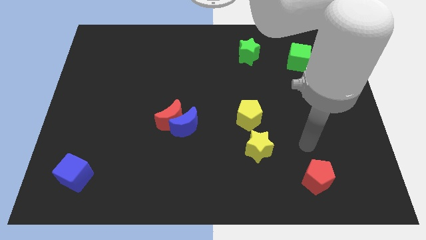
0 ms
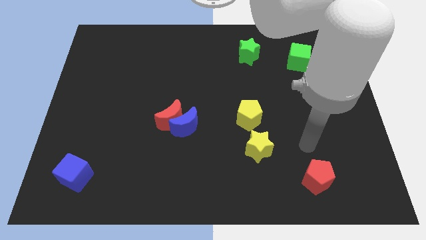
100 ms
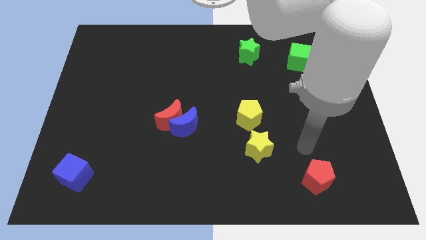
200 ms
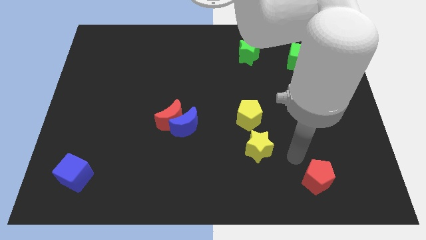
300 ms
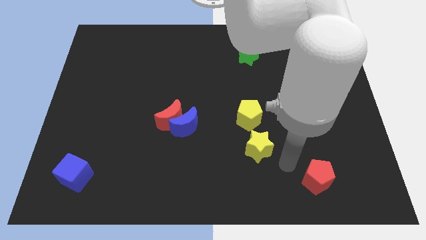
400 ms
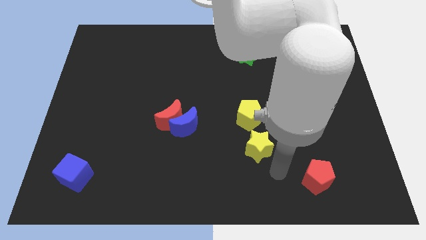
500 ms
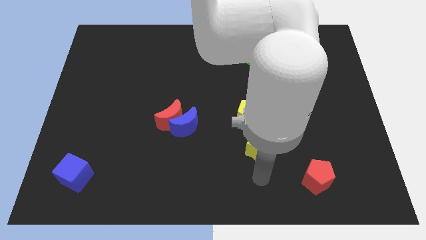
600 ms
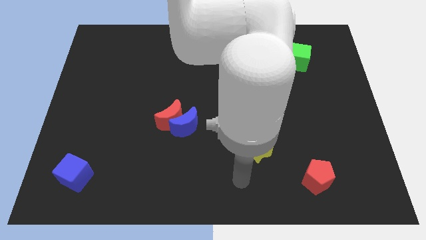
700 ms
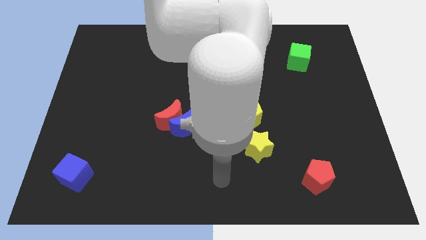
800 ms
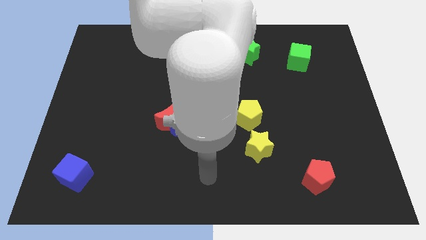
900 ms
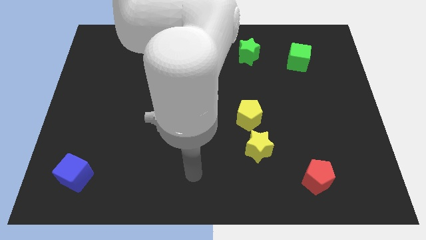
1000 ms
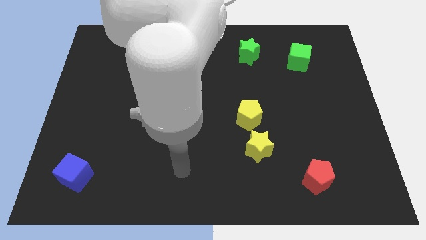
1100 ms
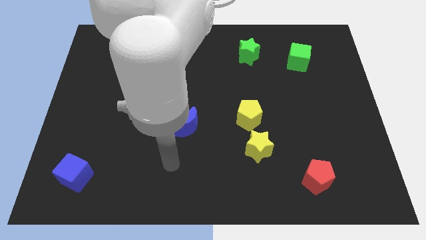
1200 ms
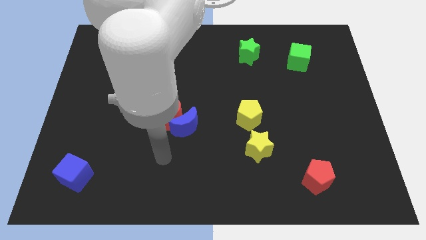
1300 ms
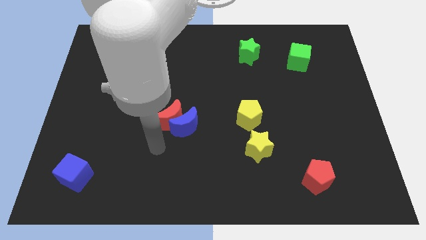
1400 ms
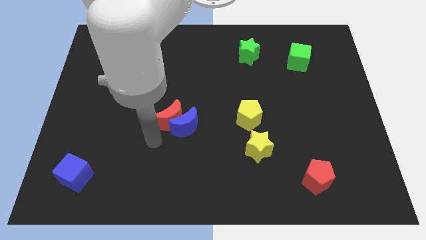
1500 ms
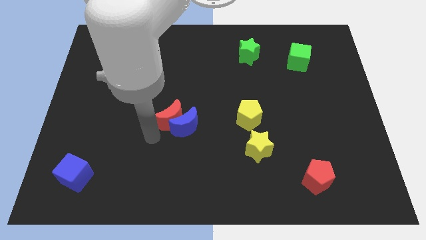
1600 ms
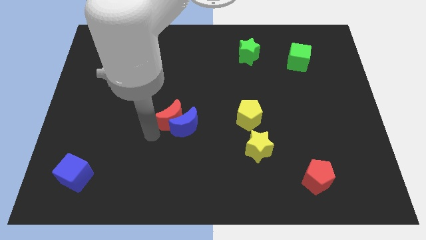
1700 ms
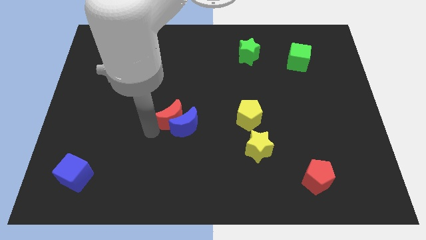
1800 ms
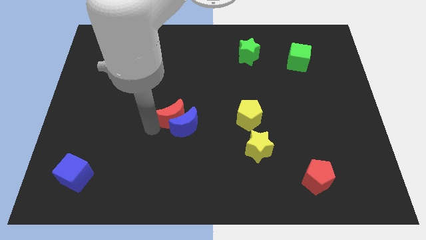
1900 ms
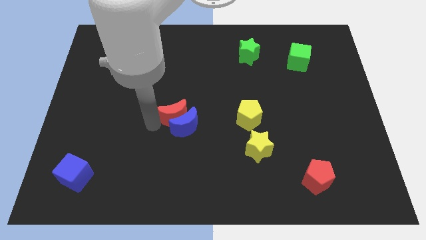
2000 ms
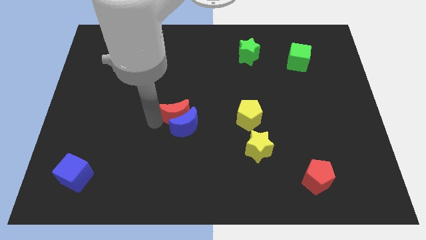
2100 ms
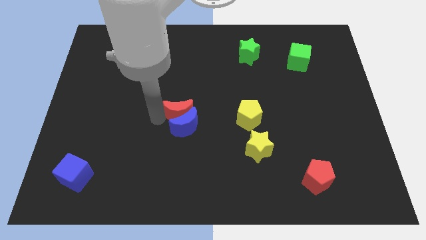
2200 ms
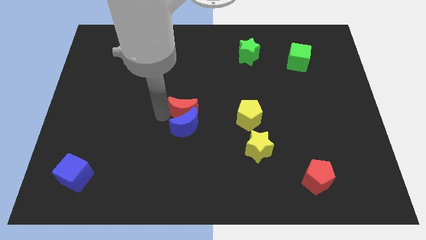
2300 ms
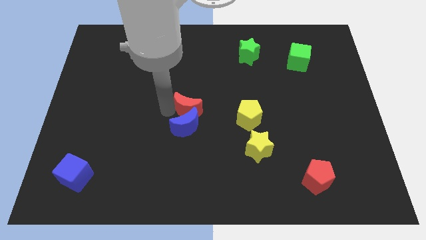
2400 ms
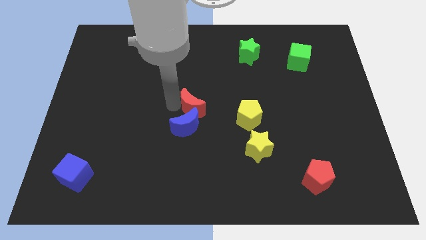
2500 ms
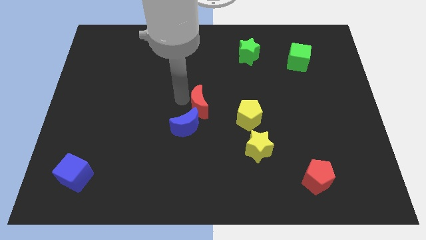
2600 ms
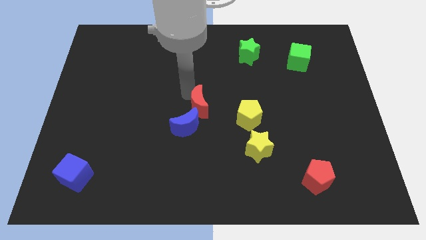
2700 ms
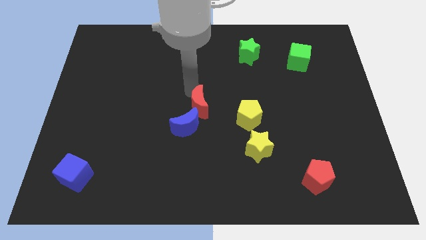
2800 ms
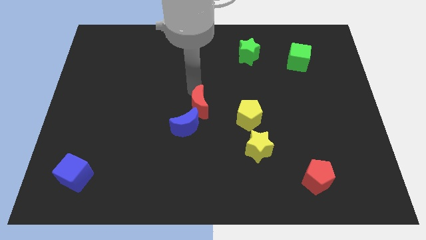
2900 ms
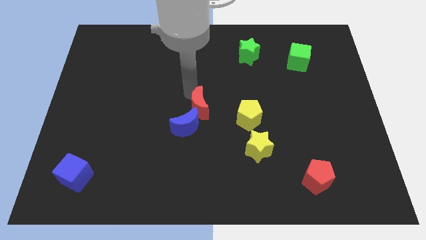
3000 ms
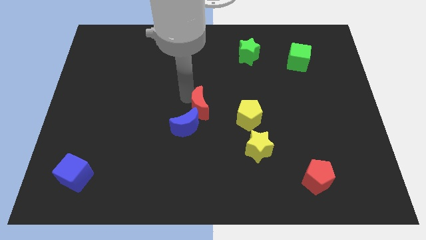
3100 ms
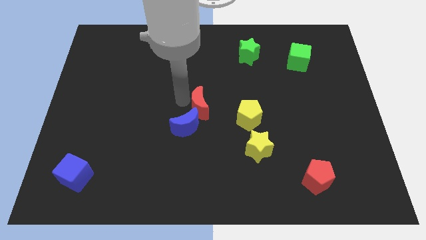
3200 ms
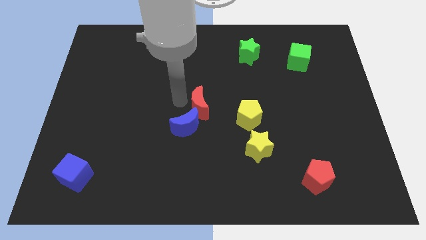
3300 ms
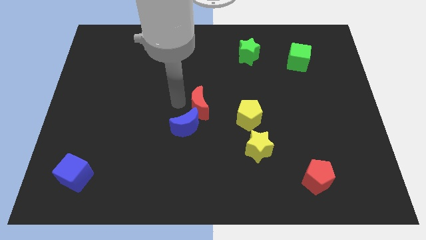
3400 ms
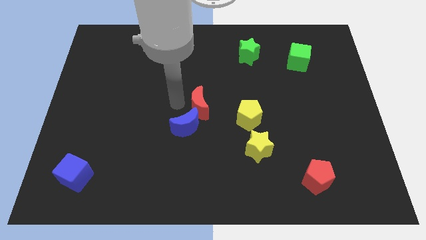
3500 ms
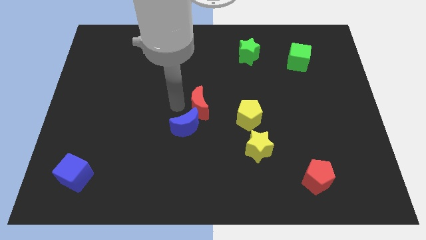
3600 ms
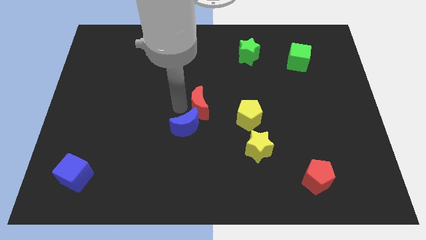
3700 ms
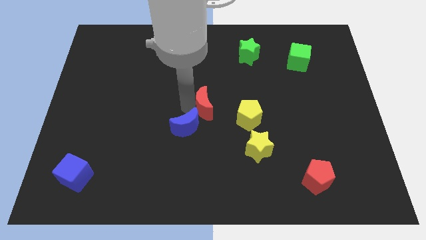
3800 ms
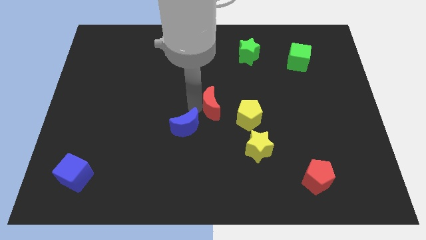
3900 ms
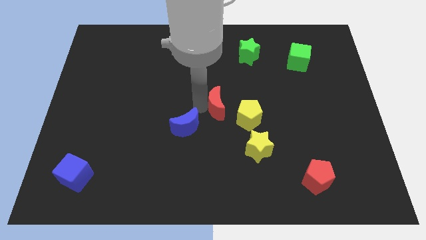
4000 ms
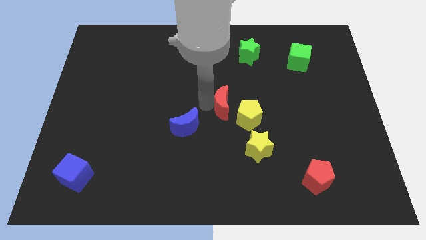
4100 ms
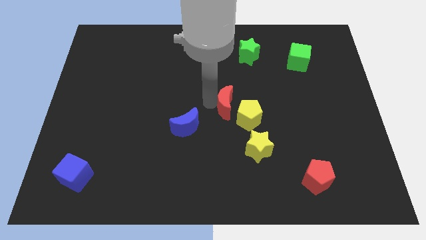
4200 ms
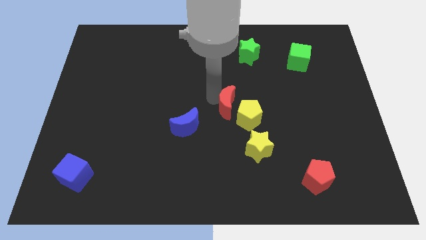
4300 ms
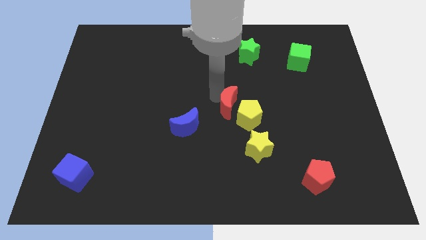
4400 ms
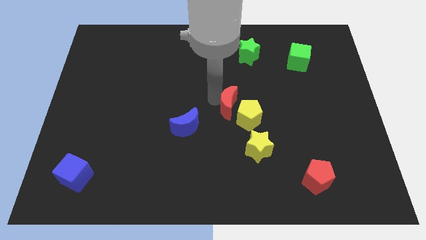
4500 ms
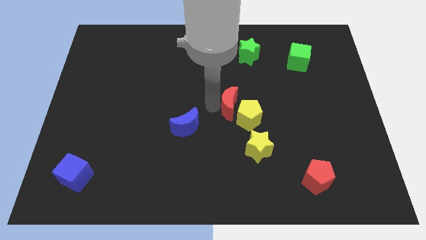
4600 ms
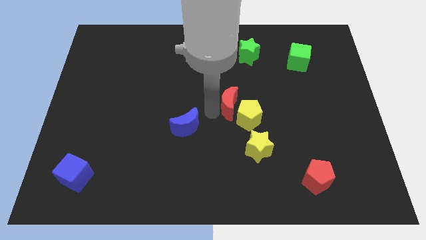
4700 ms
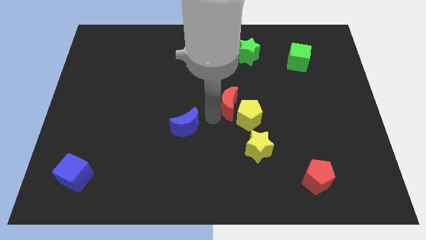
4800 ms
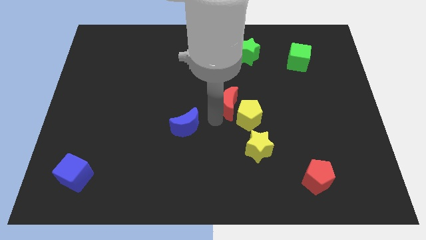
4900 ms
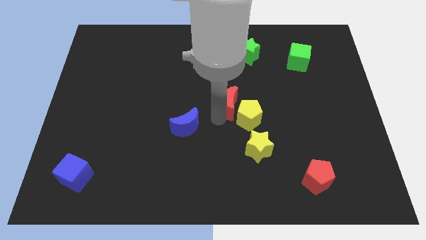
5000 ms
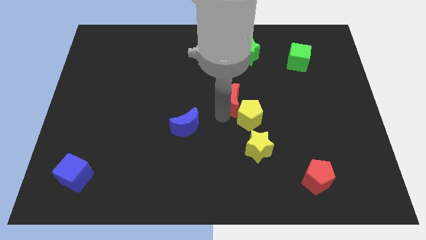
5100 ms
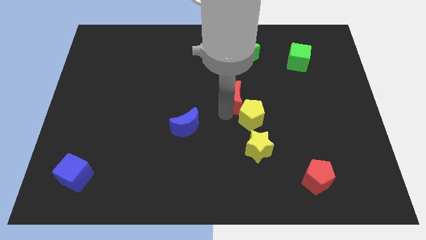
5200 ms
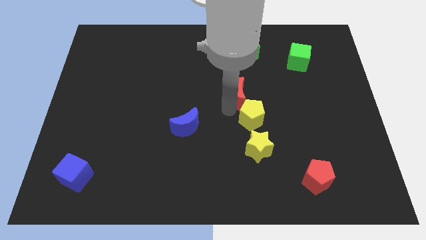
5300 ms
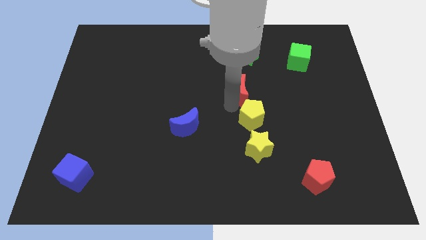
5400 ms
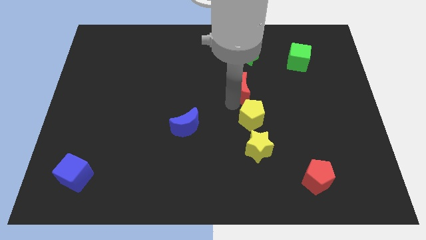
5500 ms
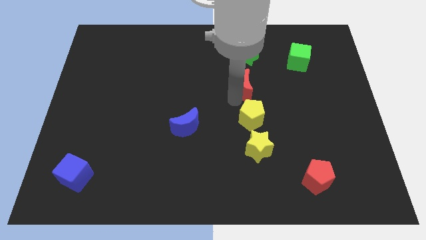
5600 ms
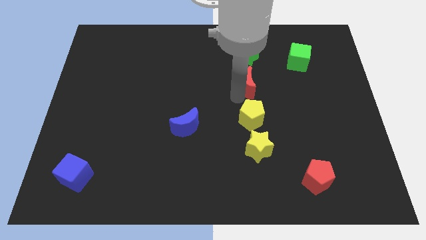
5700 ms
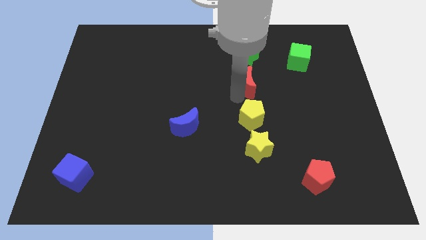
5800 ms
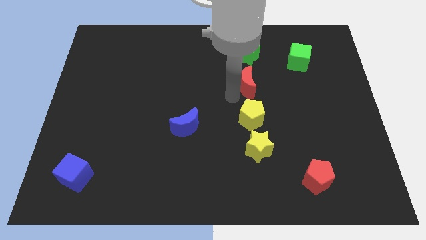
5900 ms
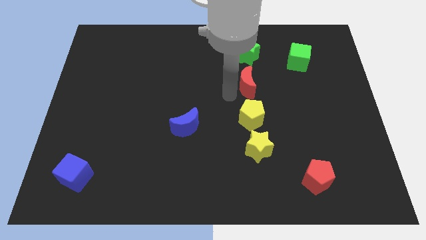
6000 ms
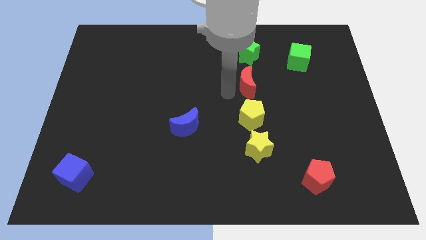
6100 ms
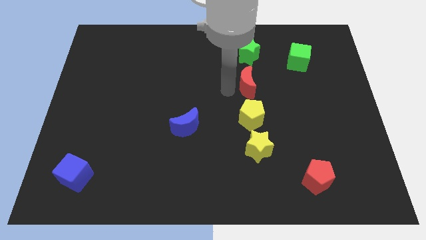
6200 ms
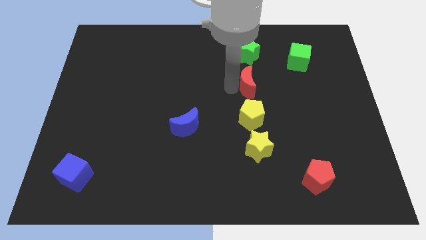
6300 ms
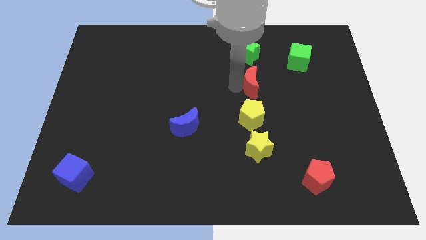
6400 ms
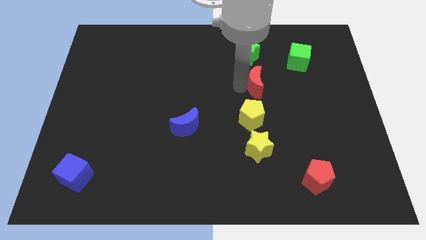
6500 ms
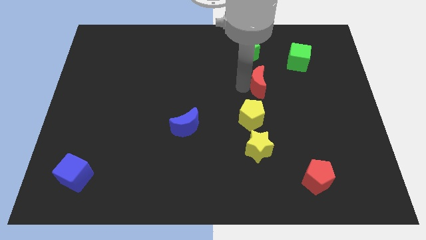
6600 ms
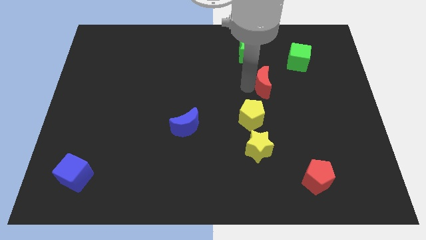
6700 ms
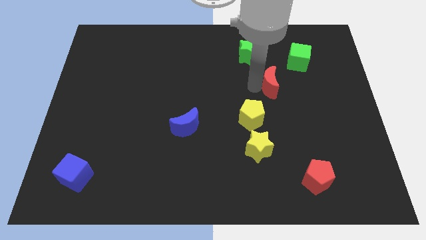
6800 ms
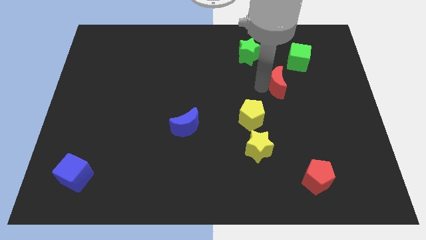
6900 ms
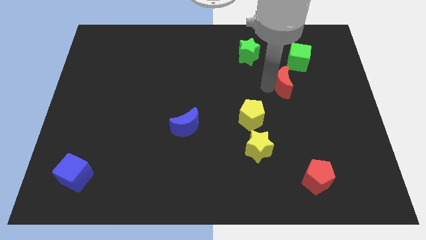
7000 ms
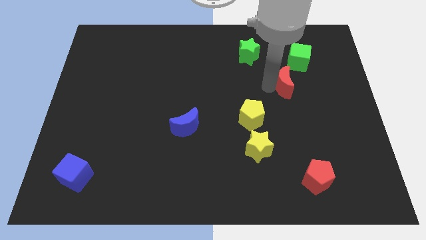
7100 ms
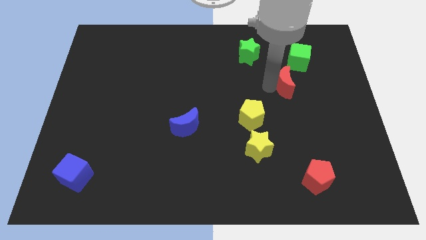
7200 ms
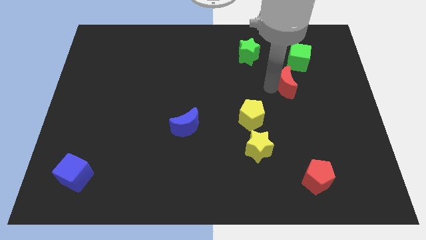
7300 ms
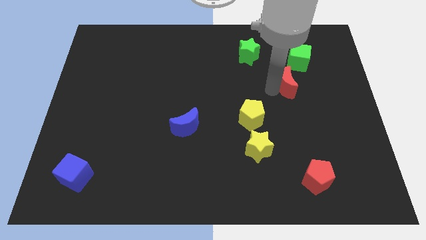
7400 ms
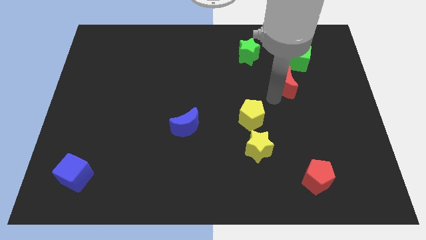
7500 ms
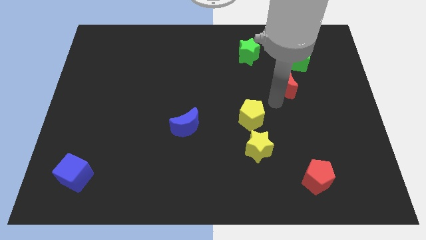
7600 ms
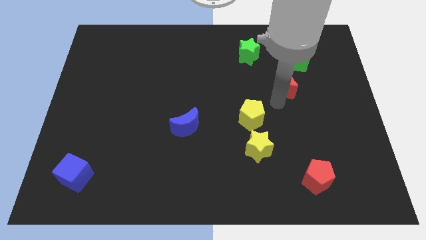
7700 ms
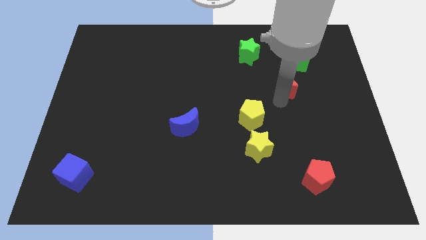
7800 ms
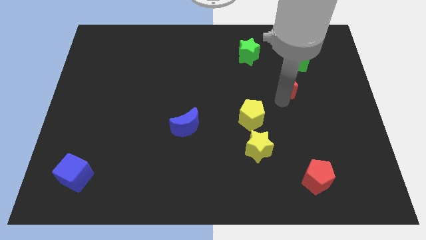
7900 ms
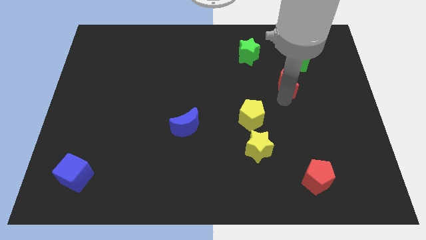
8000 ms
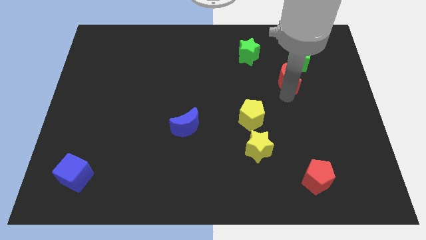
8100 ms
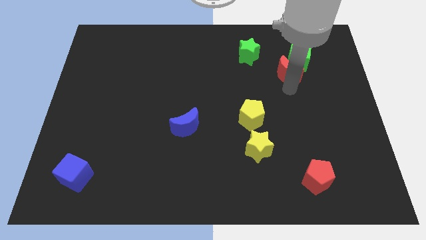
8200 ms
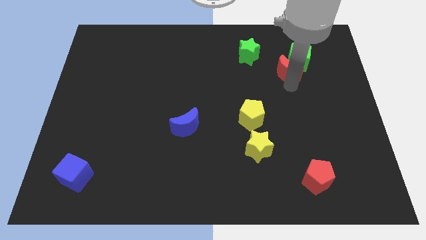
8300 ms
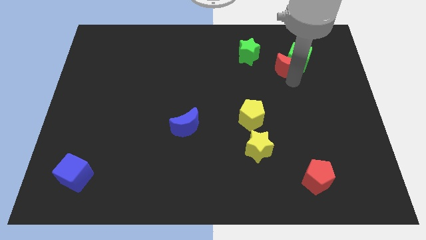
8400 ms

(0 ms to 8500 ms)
put the red moon to the green cube

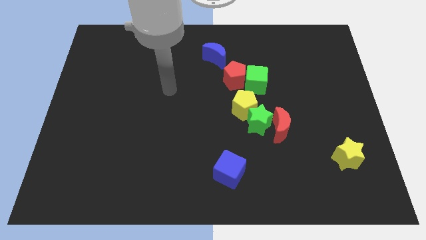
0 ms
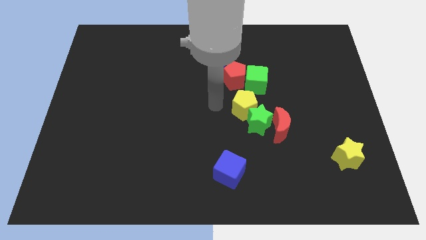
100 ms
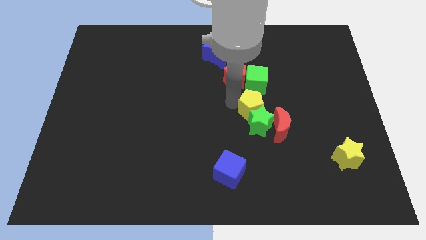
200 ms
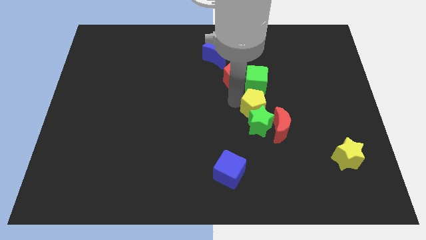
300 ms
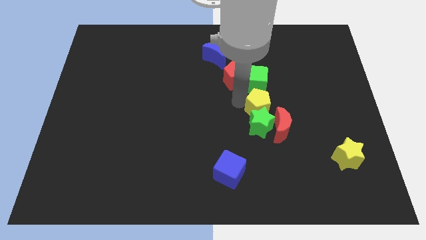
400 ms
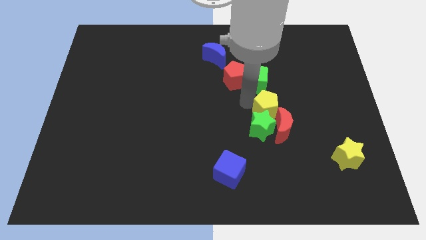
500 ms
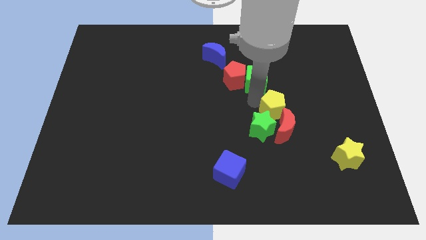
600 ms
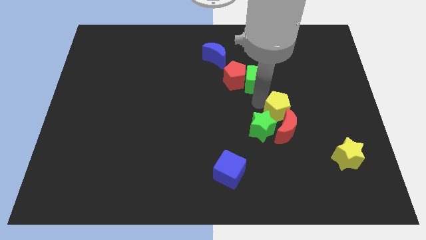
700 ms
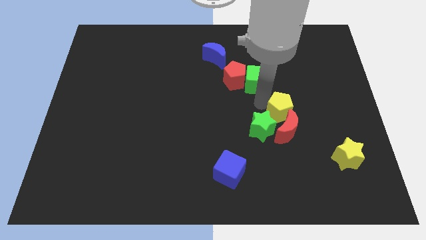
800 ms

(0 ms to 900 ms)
move the yellow pentagon next to the red moon
